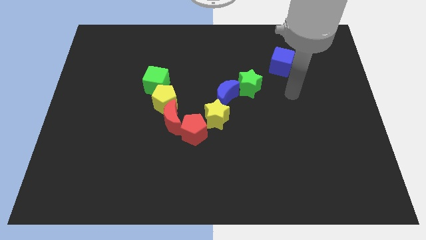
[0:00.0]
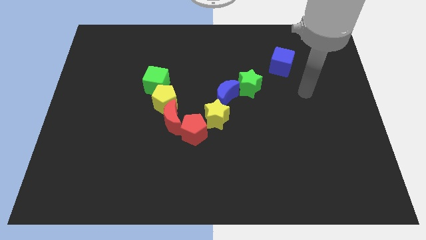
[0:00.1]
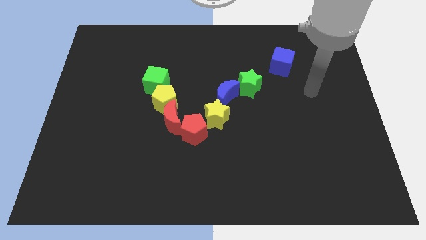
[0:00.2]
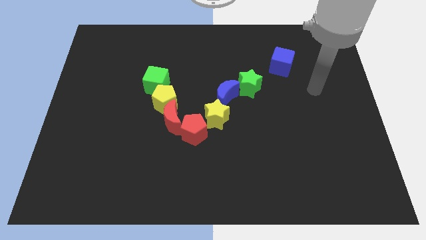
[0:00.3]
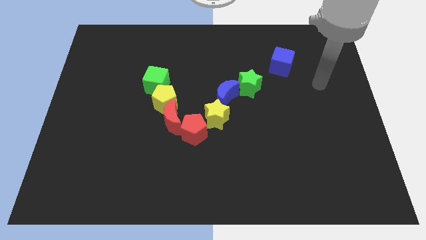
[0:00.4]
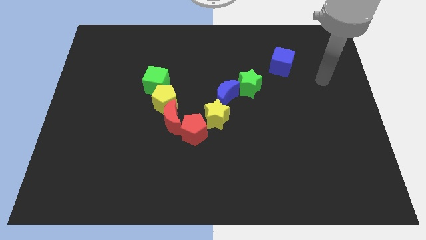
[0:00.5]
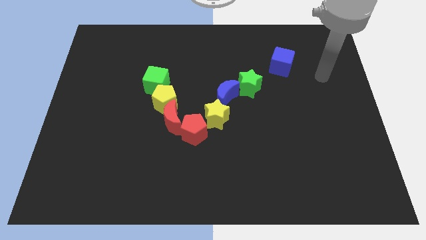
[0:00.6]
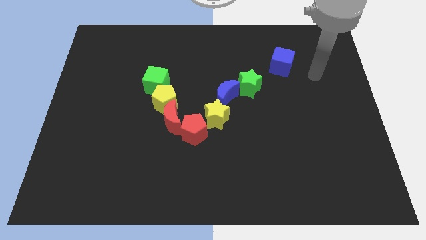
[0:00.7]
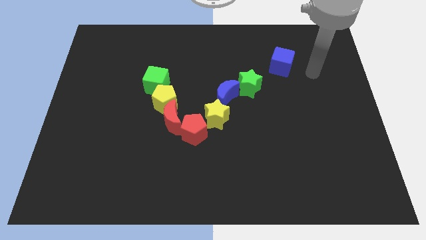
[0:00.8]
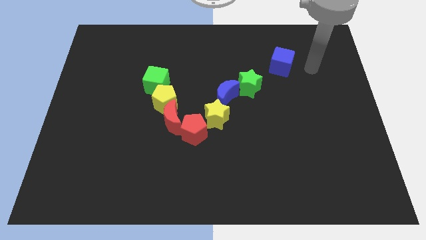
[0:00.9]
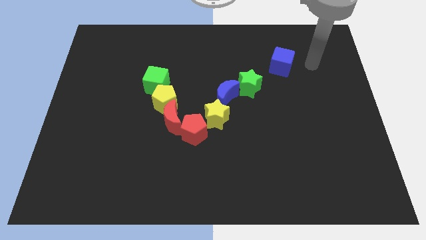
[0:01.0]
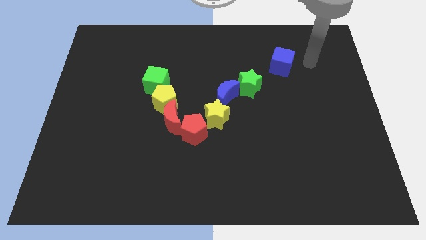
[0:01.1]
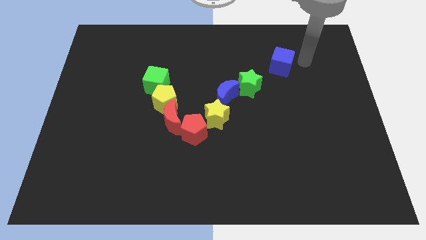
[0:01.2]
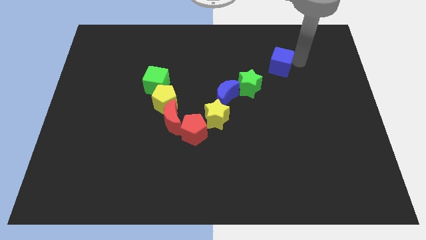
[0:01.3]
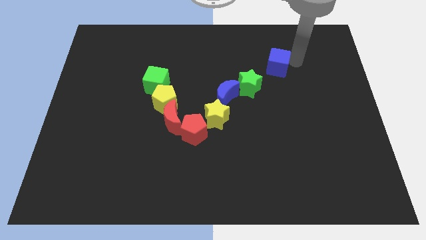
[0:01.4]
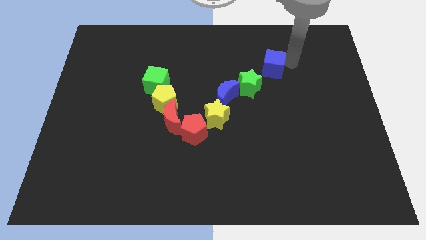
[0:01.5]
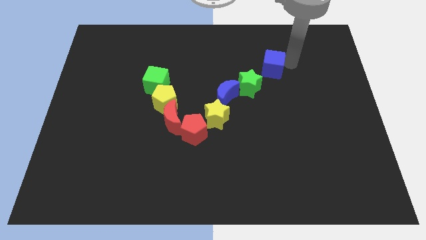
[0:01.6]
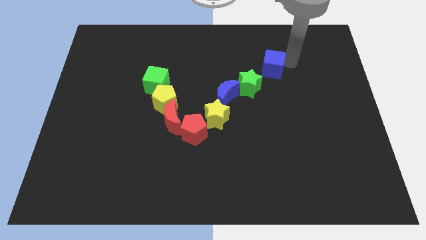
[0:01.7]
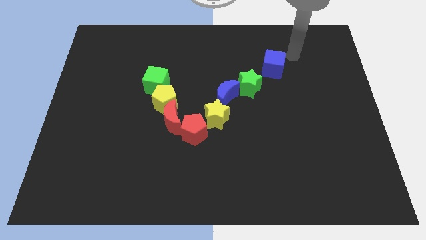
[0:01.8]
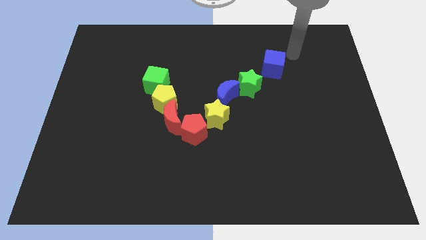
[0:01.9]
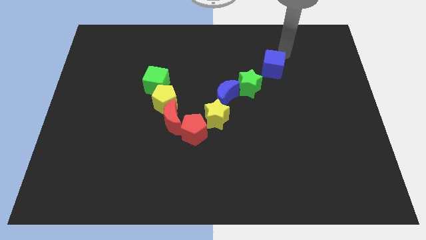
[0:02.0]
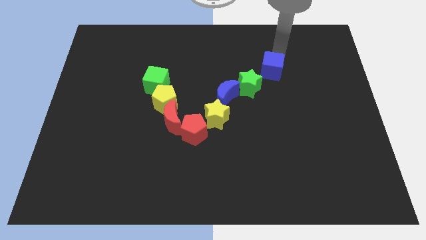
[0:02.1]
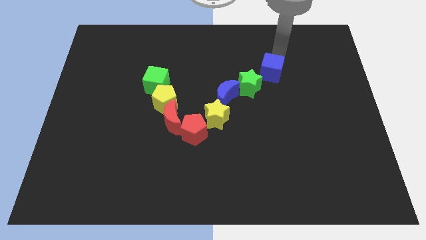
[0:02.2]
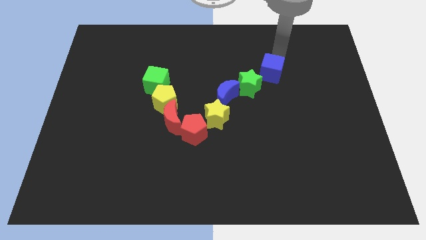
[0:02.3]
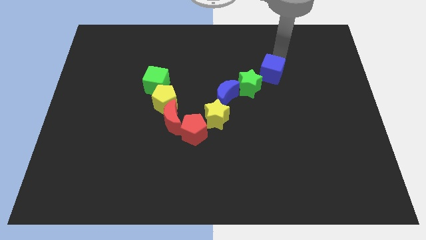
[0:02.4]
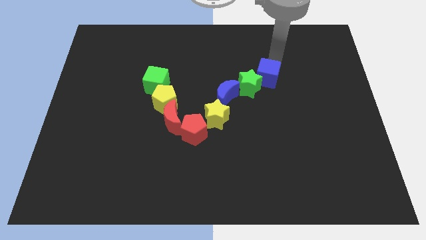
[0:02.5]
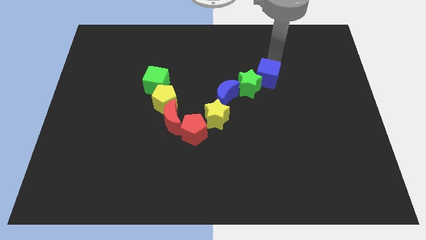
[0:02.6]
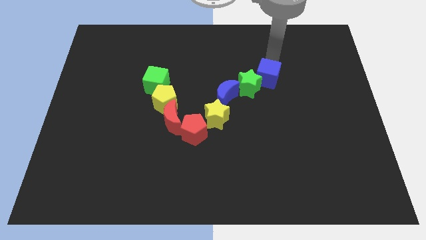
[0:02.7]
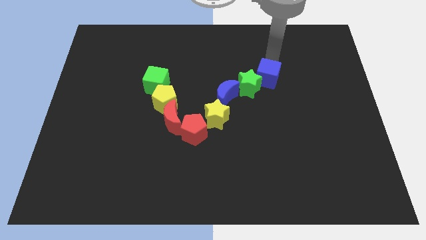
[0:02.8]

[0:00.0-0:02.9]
push the blue cube to the top right of green star

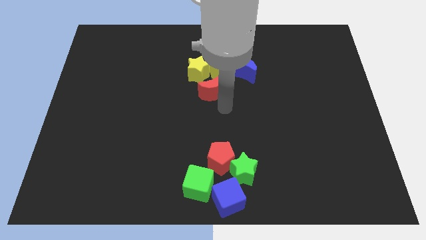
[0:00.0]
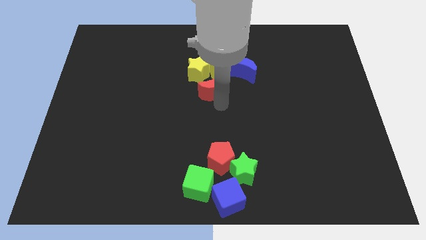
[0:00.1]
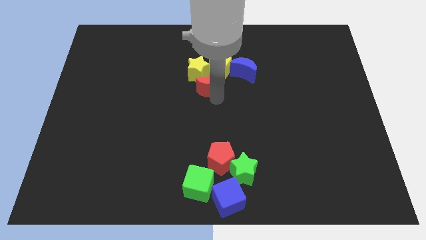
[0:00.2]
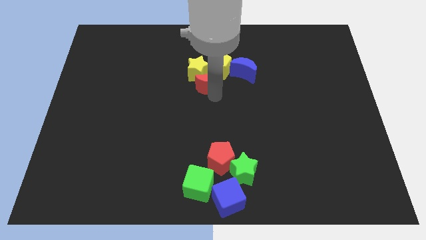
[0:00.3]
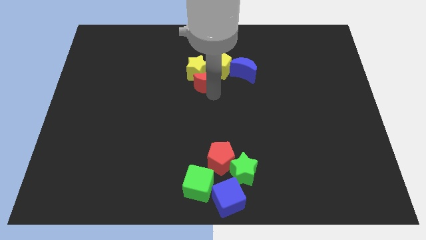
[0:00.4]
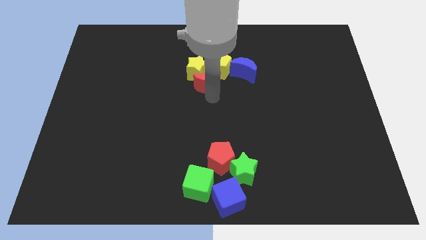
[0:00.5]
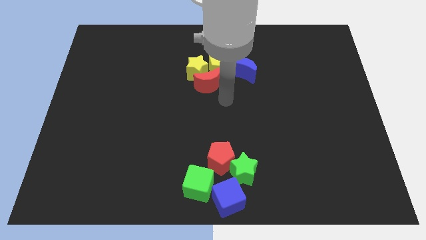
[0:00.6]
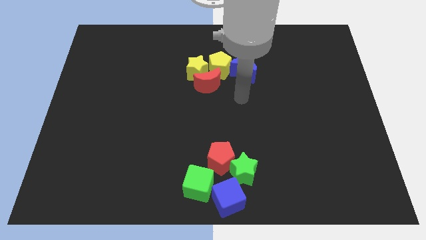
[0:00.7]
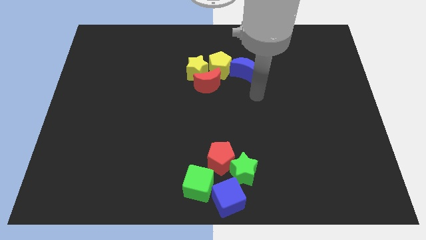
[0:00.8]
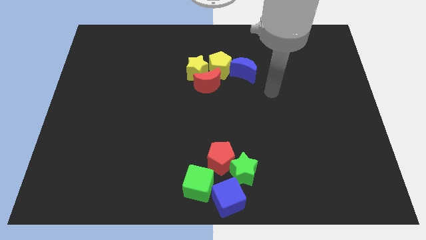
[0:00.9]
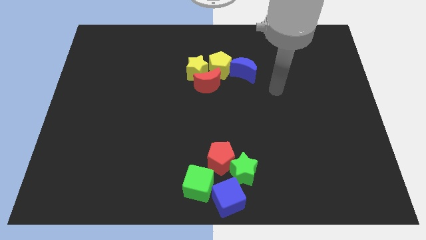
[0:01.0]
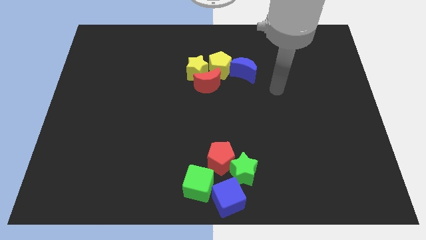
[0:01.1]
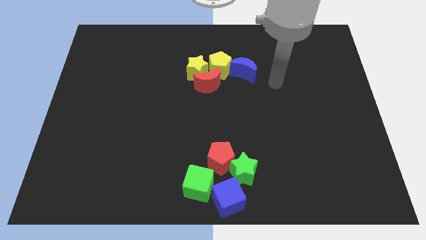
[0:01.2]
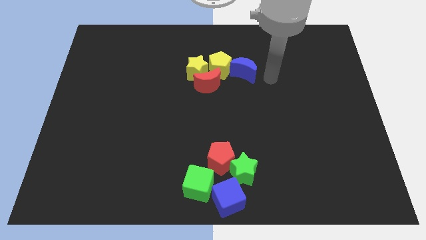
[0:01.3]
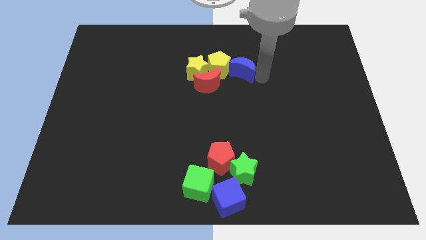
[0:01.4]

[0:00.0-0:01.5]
push the red crescent into yellow star

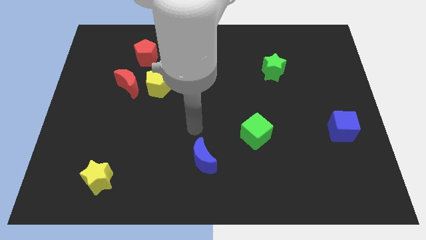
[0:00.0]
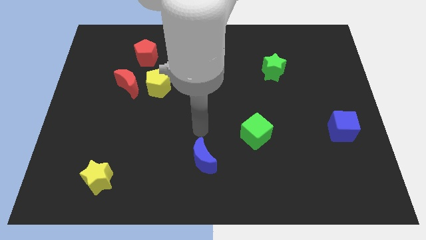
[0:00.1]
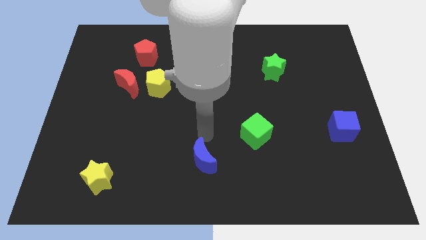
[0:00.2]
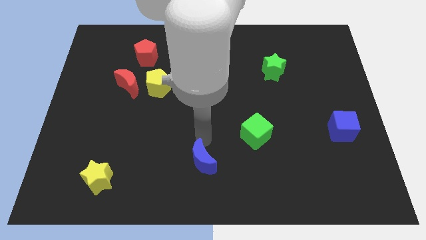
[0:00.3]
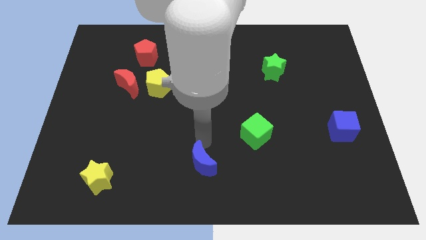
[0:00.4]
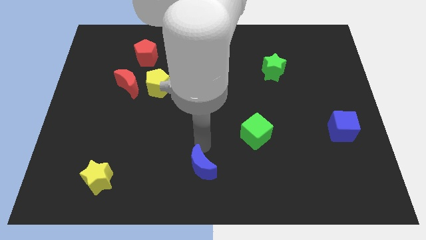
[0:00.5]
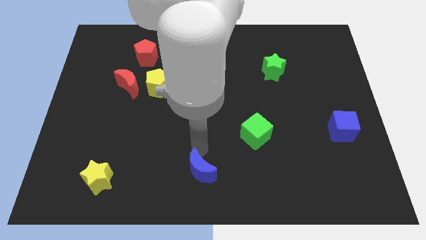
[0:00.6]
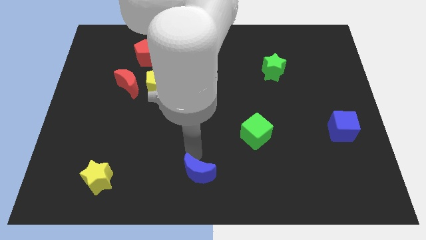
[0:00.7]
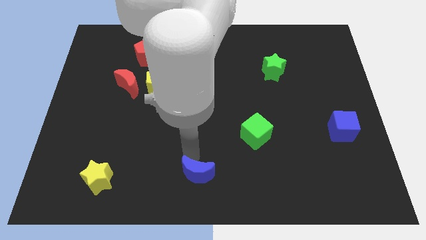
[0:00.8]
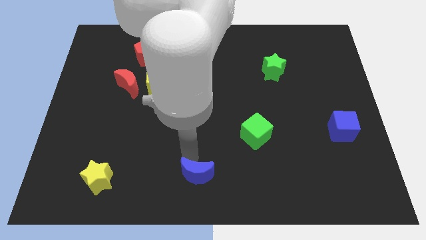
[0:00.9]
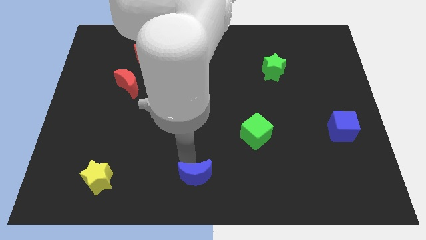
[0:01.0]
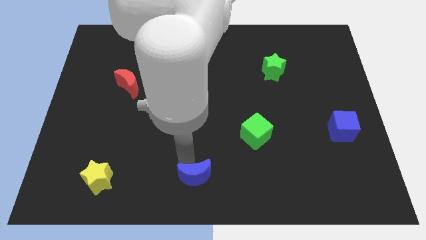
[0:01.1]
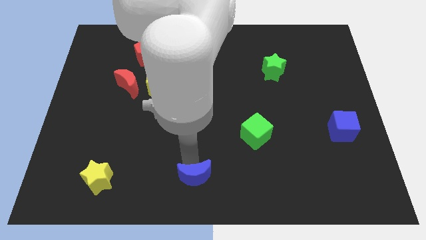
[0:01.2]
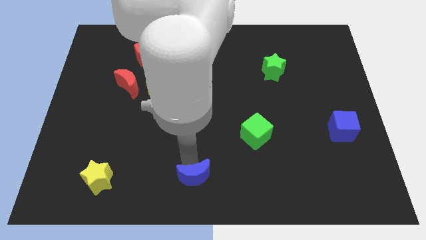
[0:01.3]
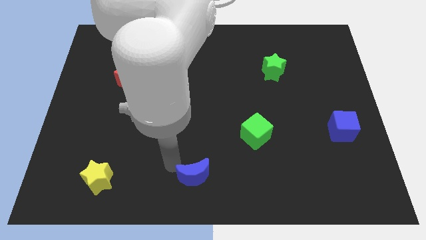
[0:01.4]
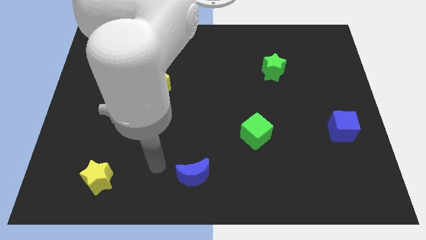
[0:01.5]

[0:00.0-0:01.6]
push the blue moon to the horizontal right of the yellow star

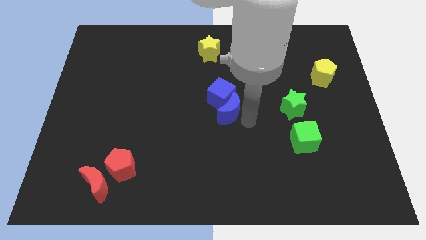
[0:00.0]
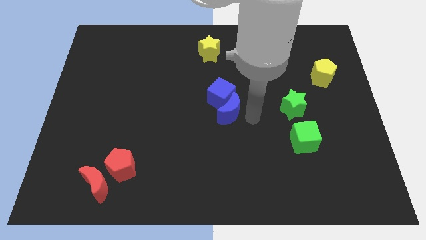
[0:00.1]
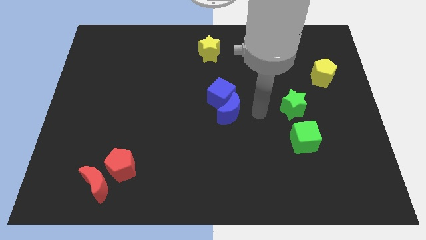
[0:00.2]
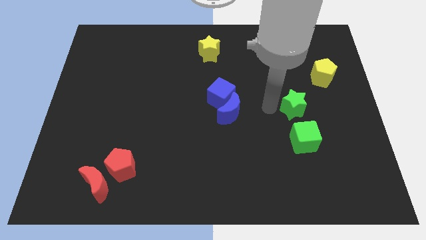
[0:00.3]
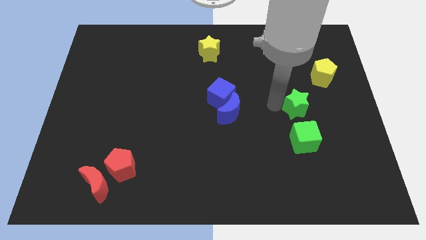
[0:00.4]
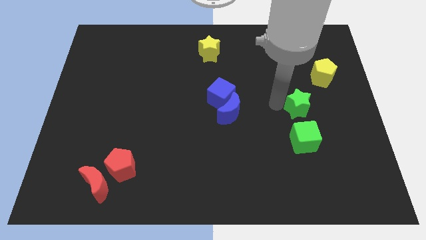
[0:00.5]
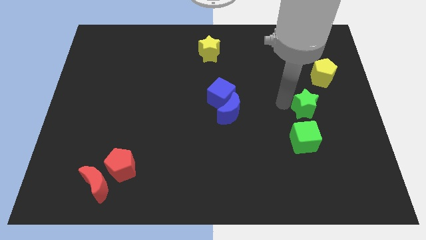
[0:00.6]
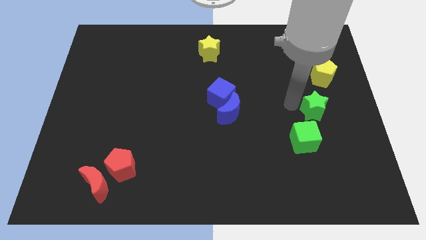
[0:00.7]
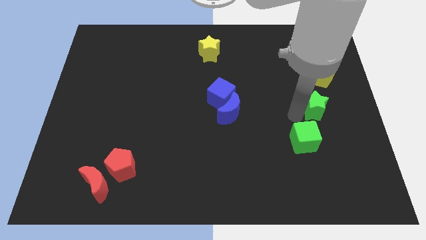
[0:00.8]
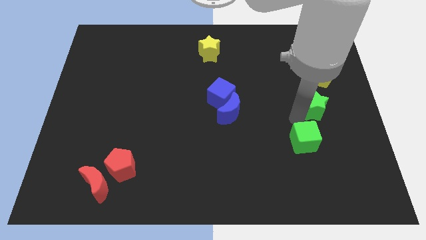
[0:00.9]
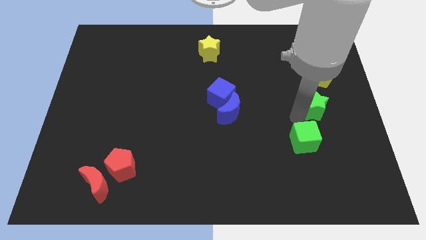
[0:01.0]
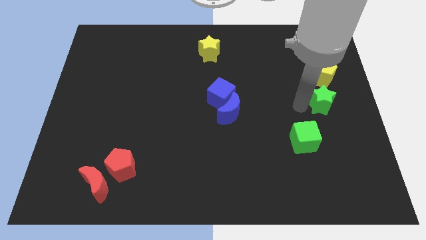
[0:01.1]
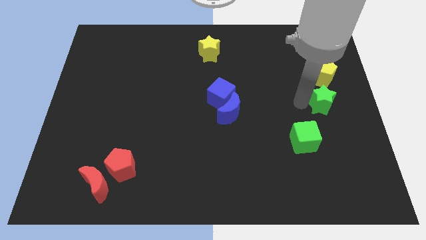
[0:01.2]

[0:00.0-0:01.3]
put the green star to the top right side of the green cube

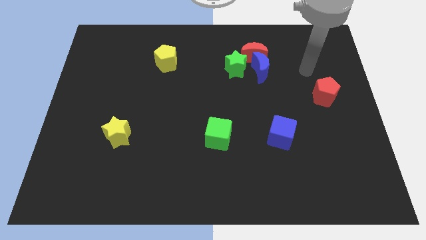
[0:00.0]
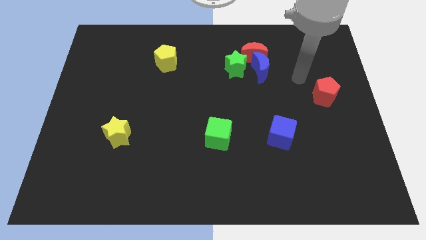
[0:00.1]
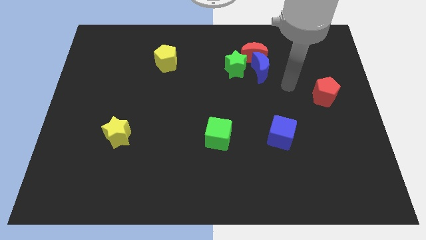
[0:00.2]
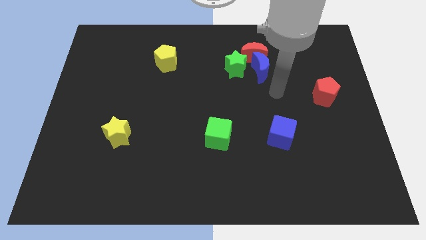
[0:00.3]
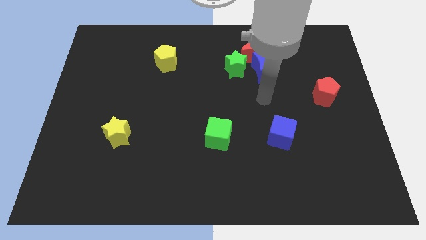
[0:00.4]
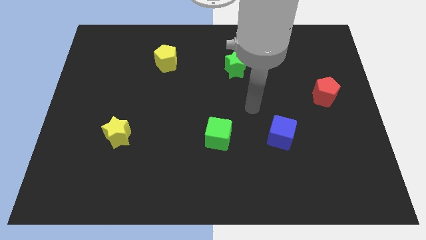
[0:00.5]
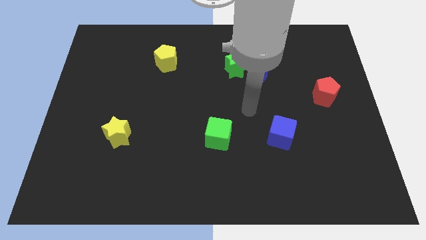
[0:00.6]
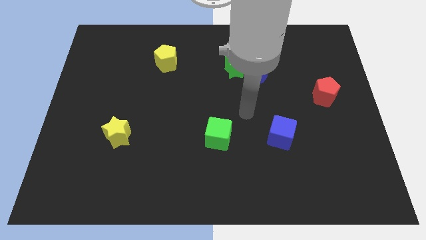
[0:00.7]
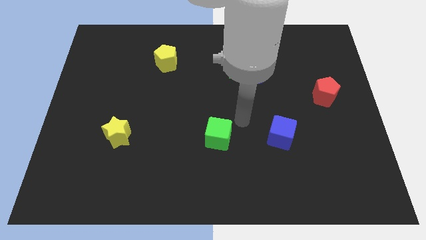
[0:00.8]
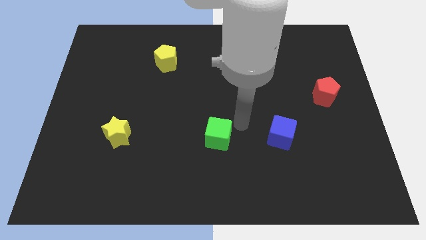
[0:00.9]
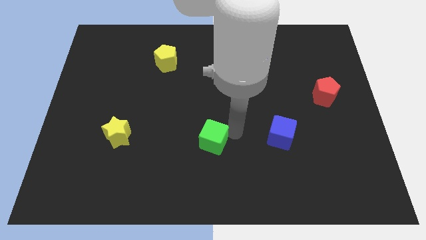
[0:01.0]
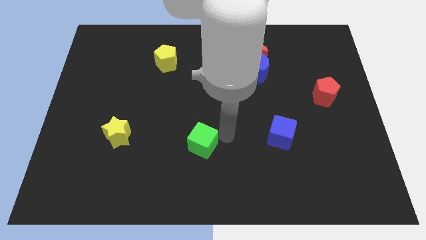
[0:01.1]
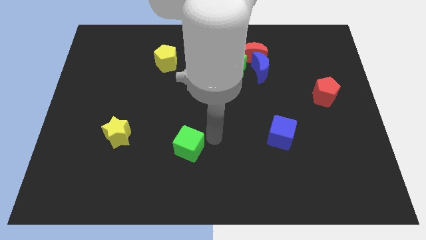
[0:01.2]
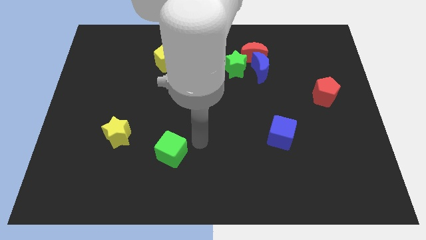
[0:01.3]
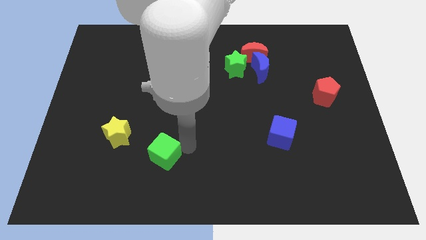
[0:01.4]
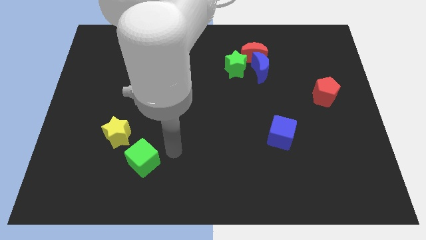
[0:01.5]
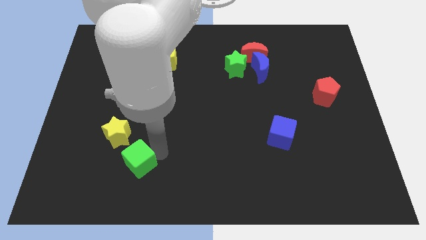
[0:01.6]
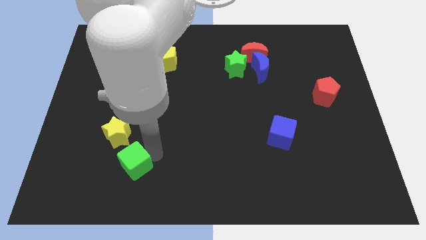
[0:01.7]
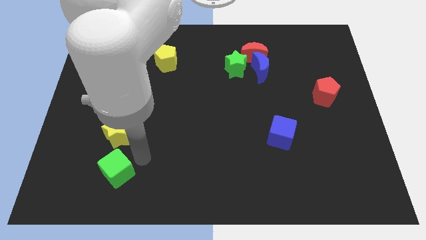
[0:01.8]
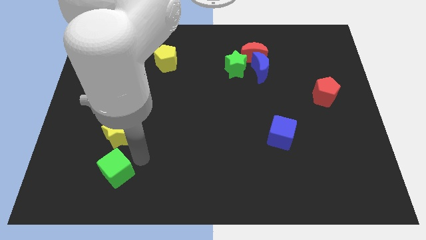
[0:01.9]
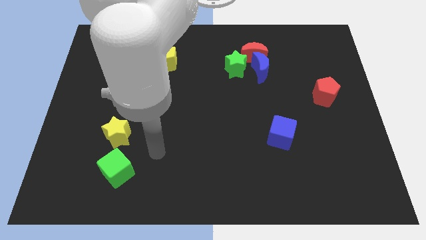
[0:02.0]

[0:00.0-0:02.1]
push the green cube to the bottom side of yellow star
